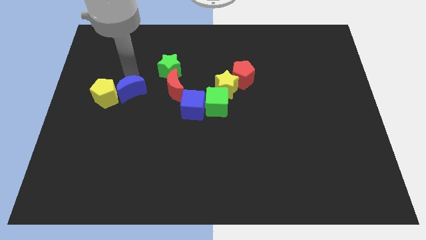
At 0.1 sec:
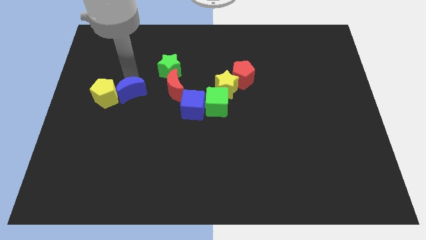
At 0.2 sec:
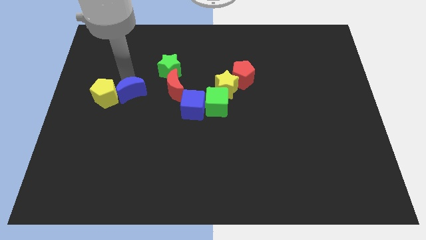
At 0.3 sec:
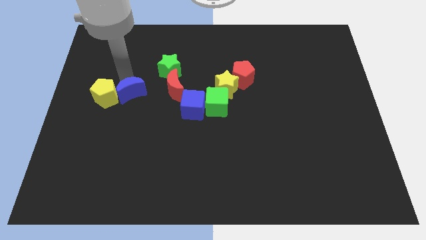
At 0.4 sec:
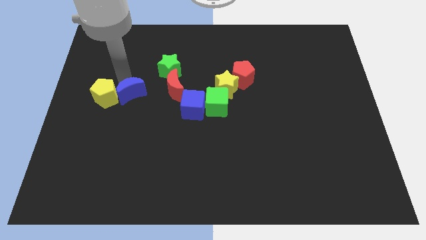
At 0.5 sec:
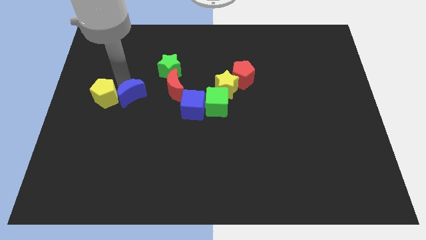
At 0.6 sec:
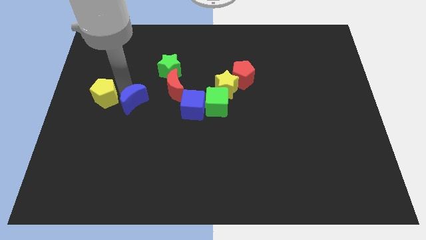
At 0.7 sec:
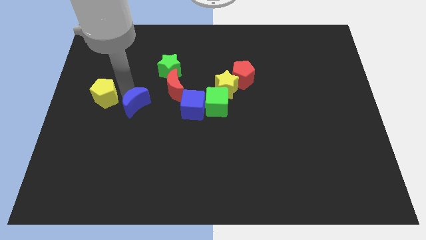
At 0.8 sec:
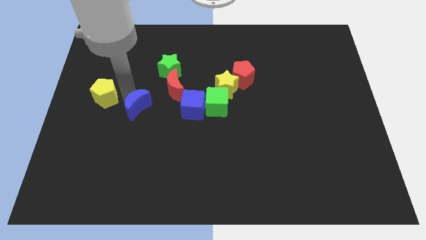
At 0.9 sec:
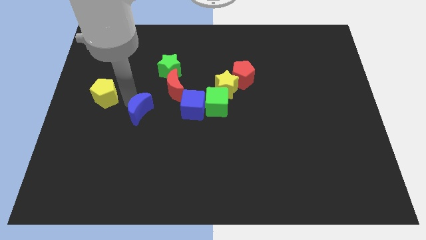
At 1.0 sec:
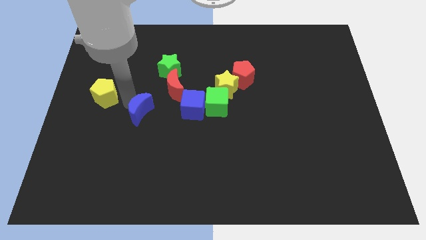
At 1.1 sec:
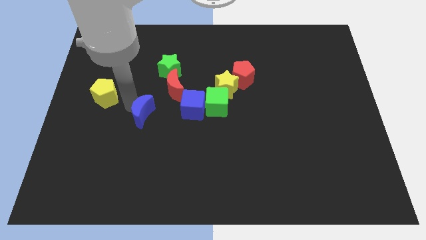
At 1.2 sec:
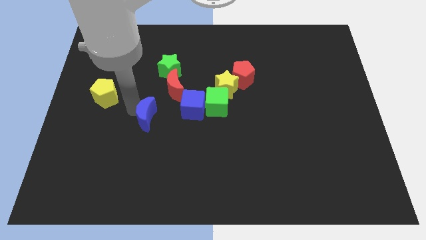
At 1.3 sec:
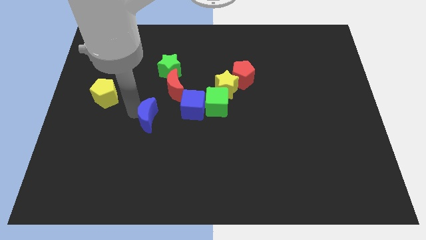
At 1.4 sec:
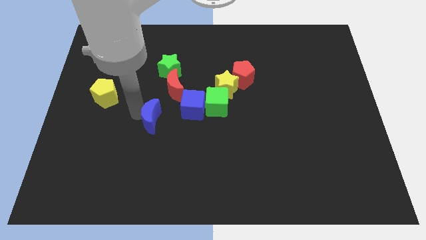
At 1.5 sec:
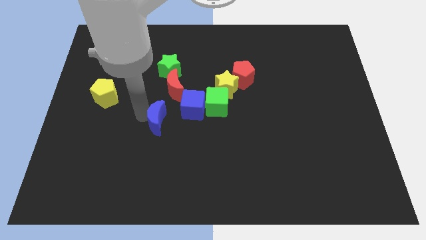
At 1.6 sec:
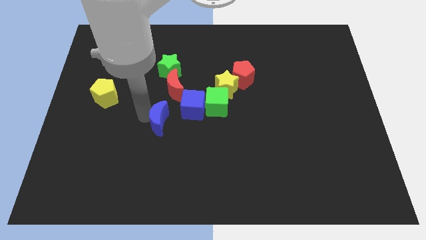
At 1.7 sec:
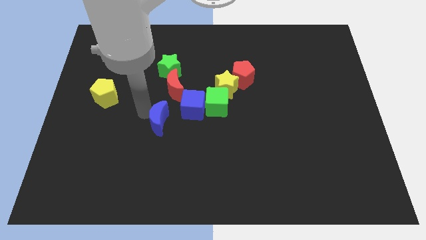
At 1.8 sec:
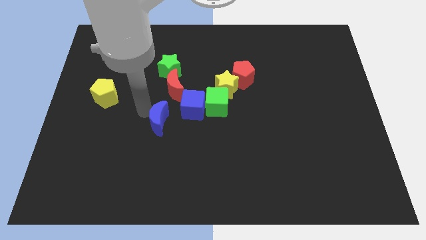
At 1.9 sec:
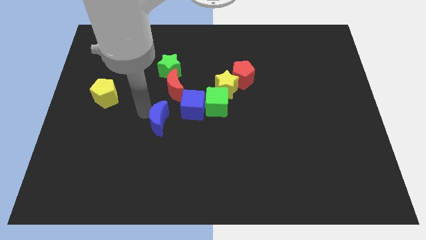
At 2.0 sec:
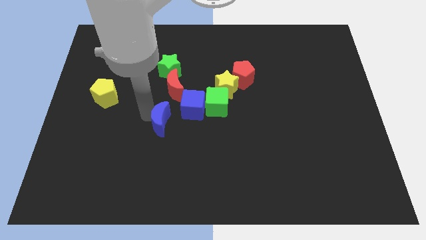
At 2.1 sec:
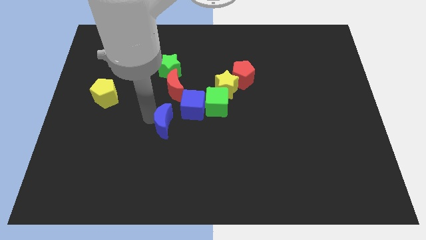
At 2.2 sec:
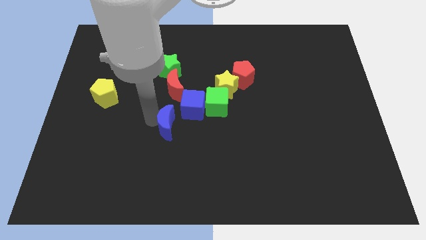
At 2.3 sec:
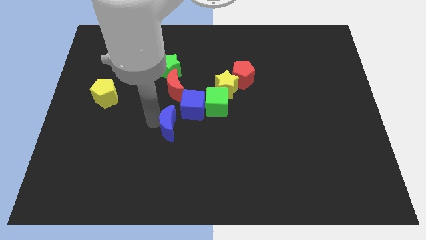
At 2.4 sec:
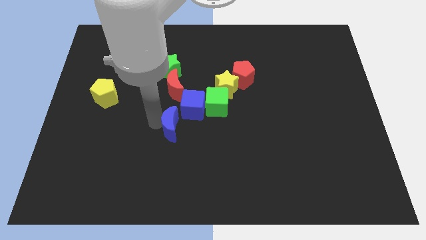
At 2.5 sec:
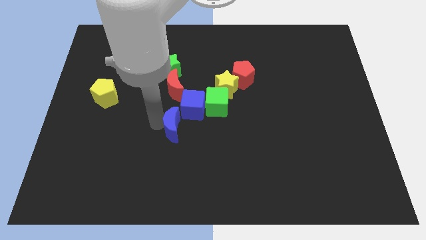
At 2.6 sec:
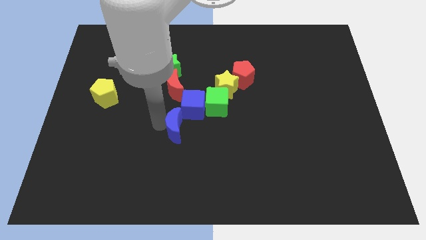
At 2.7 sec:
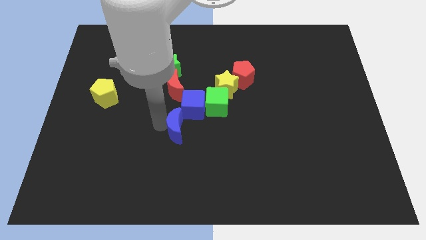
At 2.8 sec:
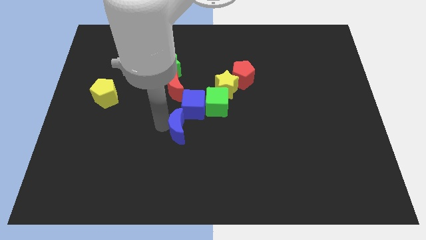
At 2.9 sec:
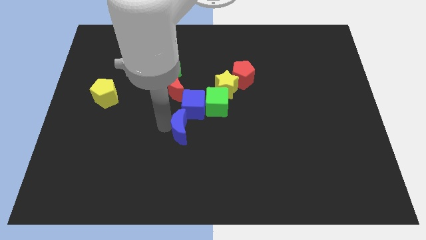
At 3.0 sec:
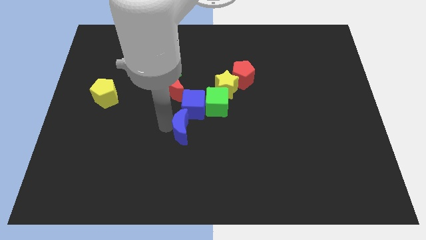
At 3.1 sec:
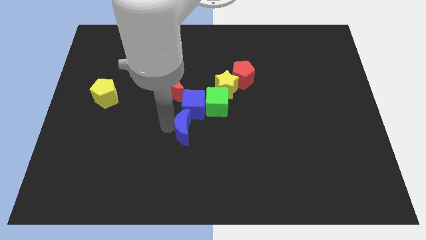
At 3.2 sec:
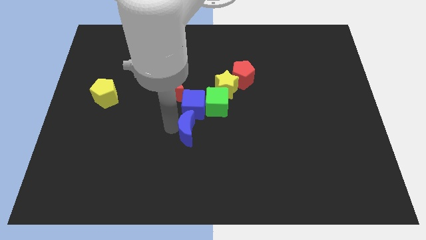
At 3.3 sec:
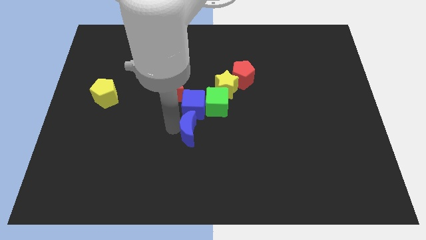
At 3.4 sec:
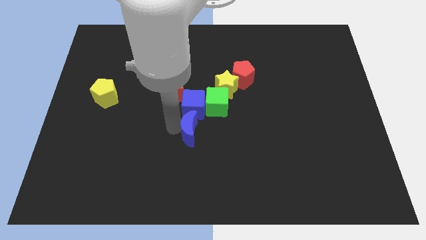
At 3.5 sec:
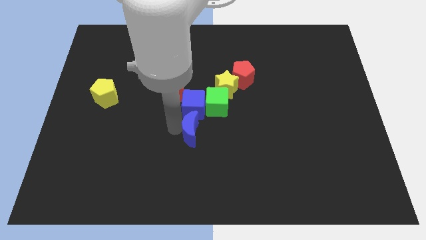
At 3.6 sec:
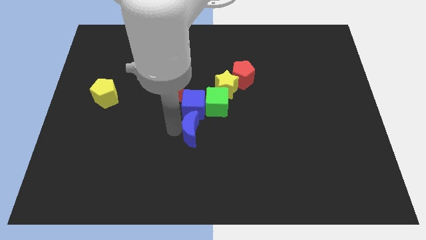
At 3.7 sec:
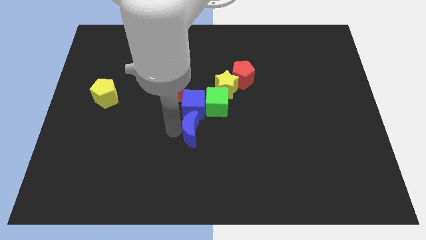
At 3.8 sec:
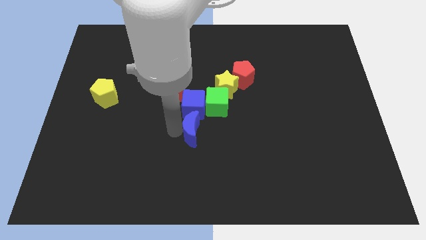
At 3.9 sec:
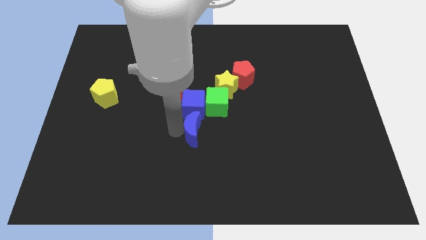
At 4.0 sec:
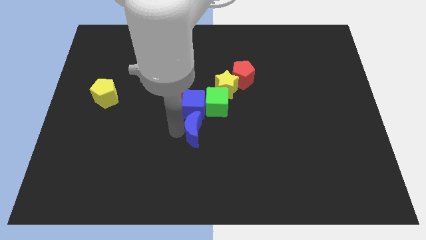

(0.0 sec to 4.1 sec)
place the blue crescent below the blue cube

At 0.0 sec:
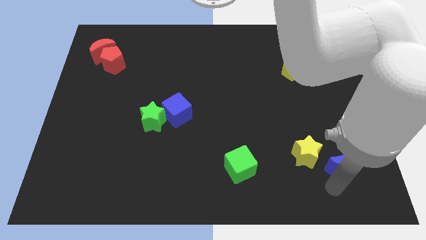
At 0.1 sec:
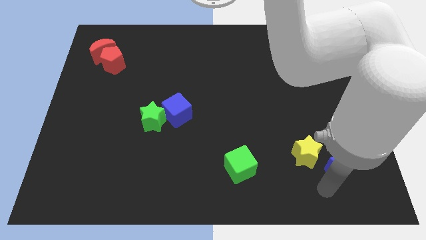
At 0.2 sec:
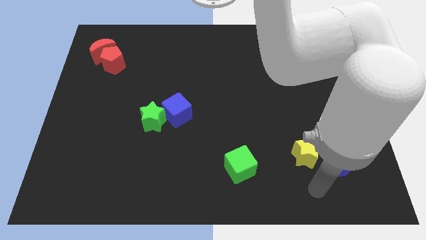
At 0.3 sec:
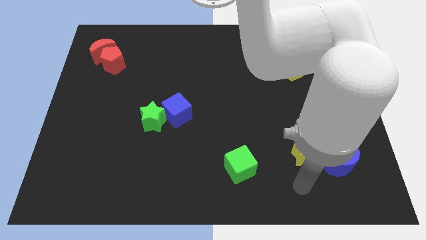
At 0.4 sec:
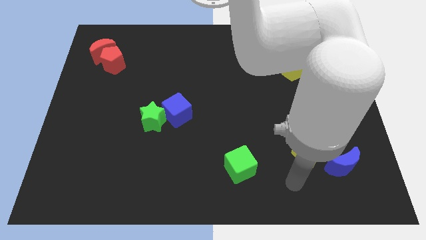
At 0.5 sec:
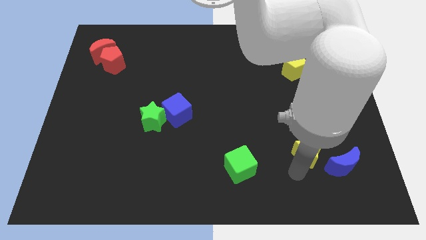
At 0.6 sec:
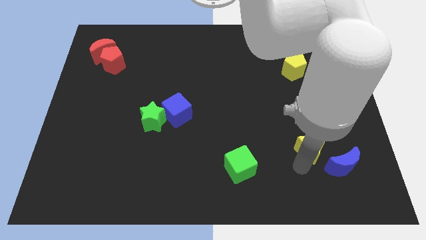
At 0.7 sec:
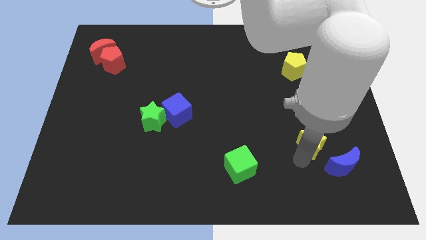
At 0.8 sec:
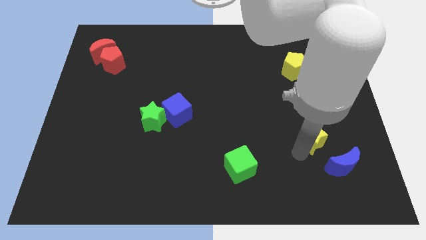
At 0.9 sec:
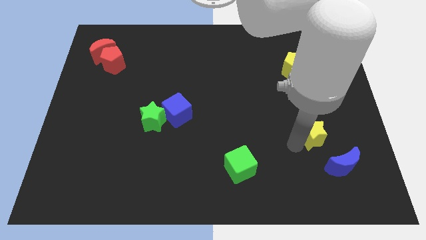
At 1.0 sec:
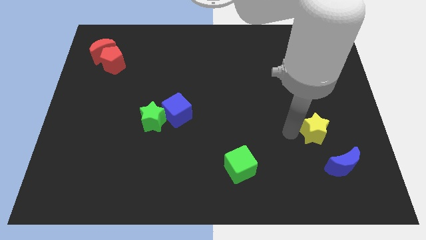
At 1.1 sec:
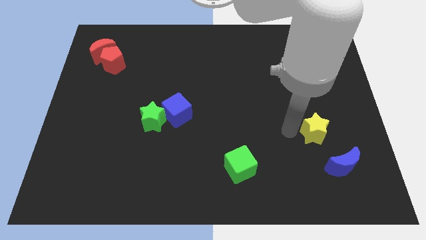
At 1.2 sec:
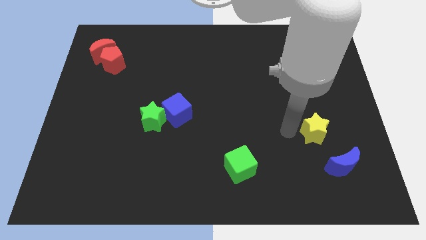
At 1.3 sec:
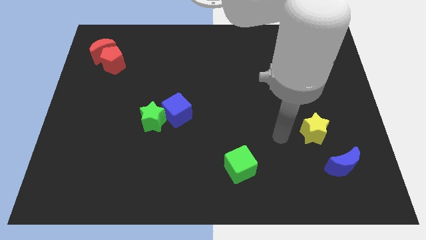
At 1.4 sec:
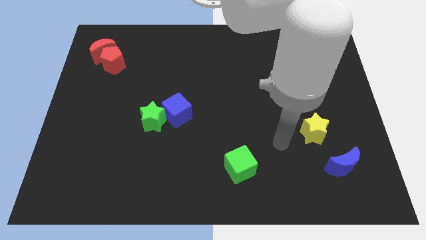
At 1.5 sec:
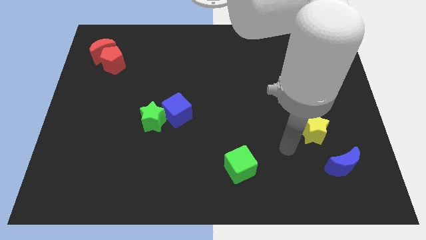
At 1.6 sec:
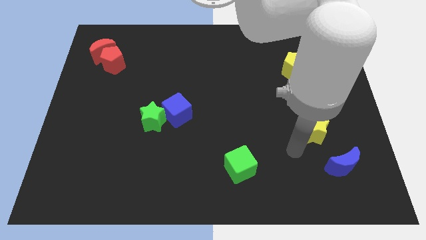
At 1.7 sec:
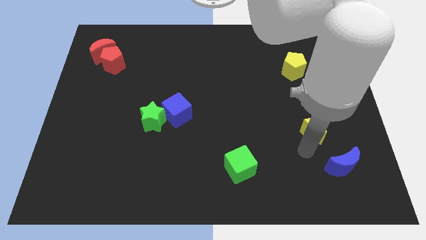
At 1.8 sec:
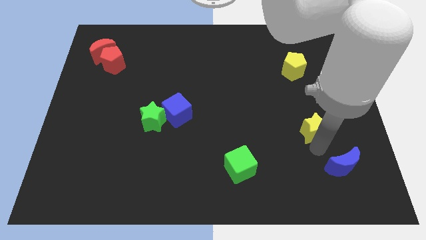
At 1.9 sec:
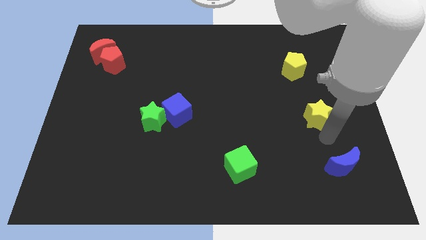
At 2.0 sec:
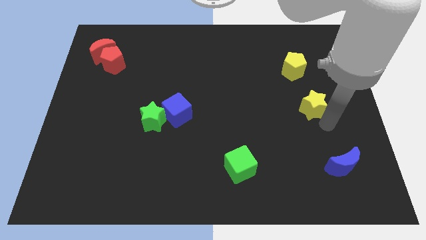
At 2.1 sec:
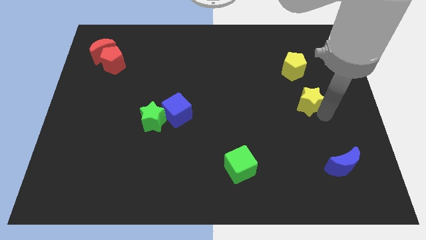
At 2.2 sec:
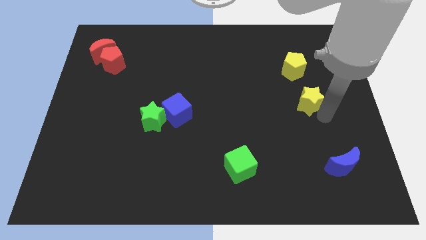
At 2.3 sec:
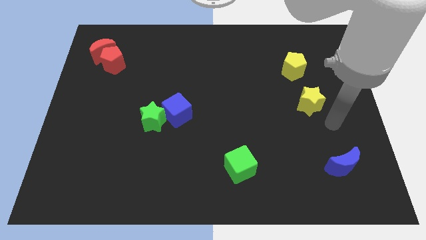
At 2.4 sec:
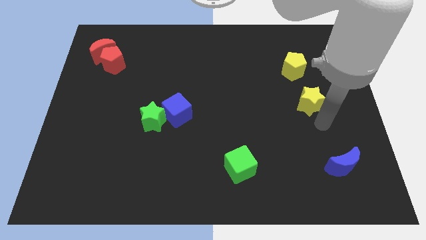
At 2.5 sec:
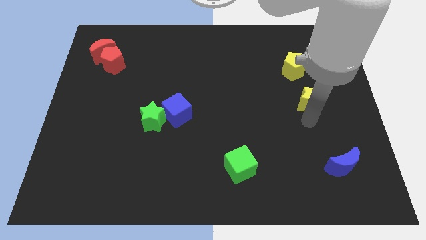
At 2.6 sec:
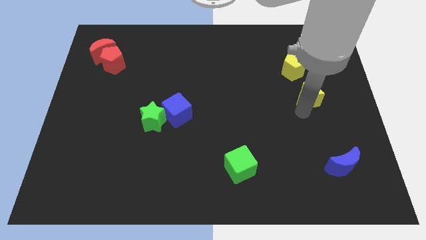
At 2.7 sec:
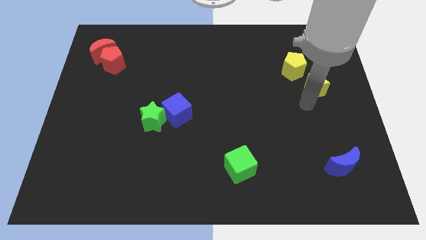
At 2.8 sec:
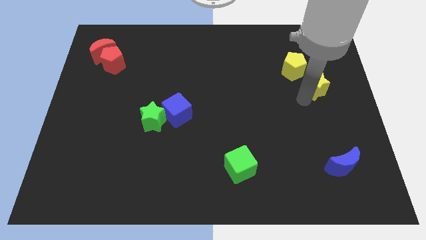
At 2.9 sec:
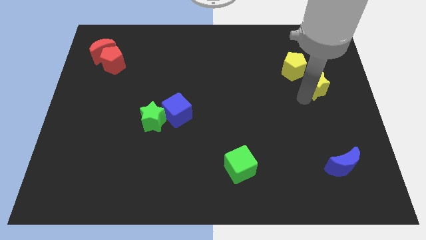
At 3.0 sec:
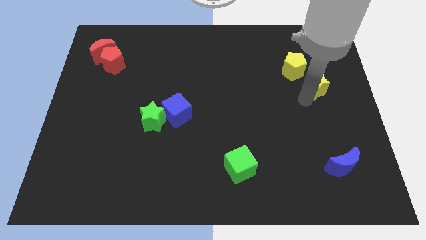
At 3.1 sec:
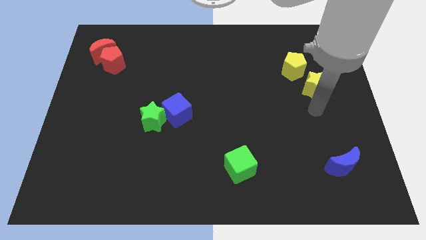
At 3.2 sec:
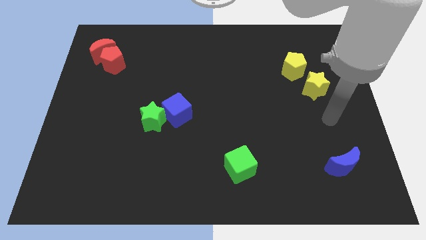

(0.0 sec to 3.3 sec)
move yellow star to the bottom right of the yellow pentagon

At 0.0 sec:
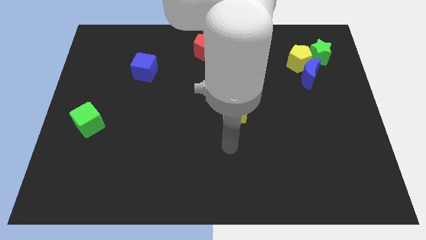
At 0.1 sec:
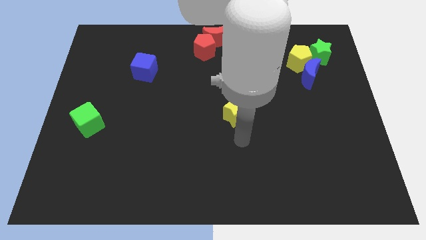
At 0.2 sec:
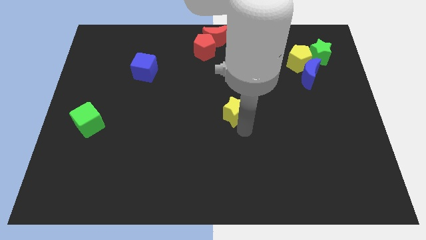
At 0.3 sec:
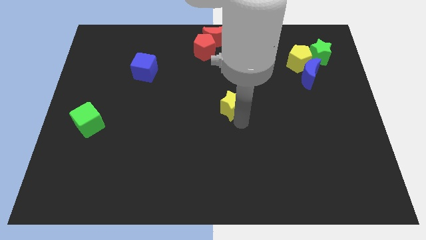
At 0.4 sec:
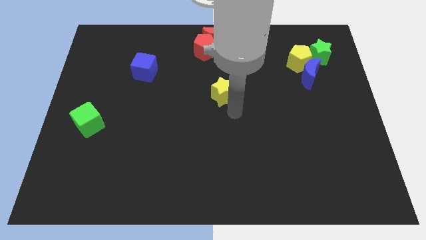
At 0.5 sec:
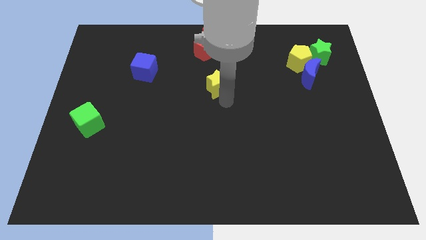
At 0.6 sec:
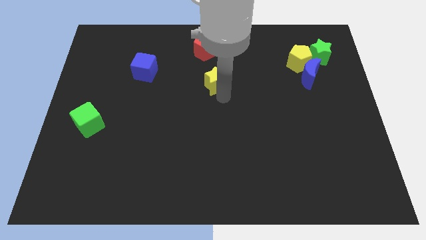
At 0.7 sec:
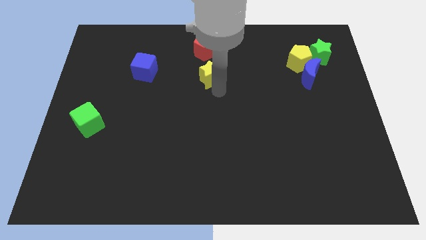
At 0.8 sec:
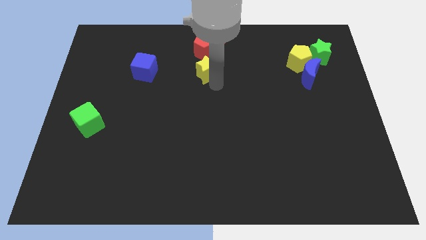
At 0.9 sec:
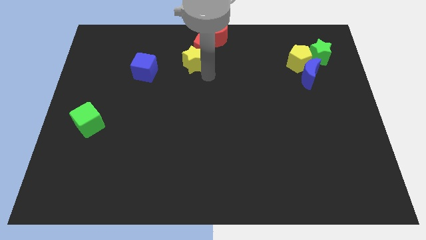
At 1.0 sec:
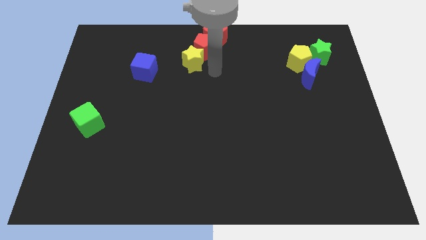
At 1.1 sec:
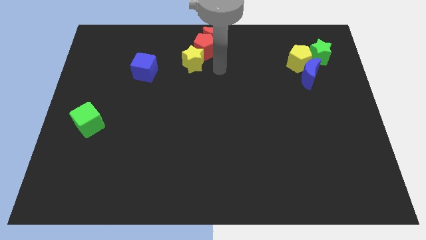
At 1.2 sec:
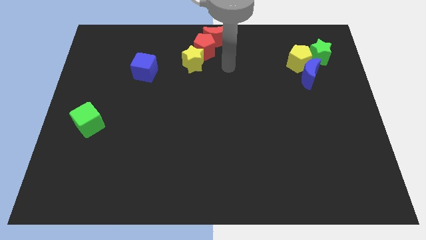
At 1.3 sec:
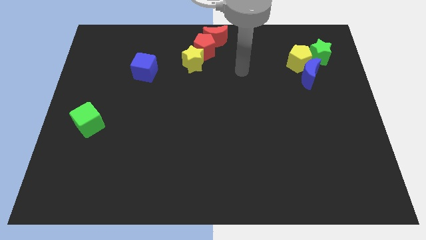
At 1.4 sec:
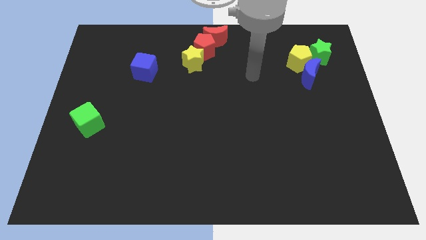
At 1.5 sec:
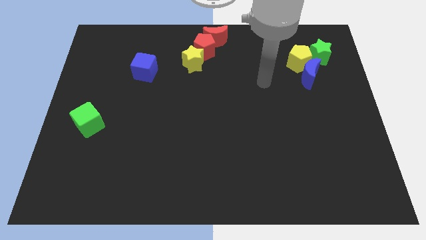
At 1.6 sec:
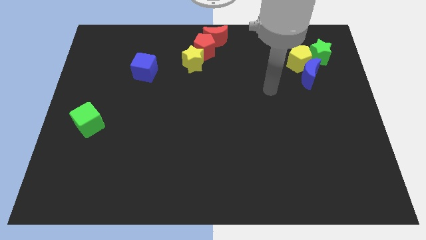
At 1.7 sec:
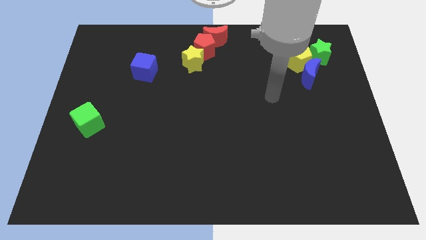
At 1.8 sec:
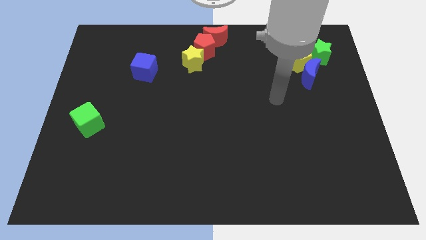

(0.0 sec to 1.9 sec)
place yellow star down to the red pentagon
